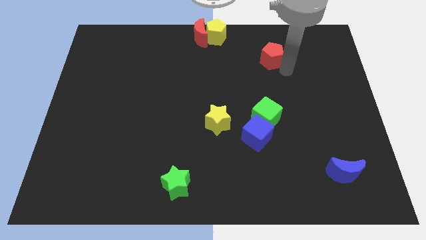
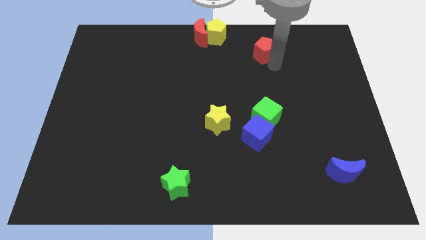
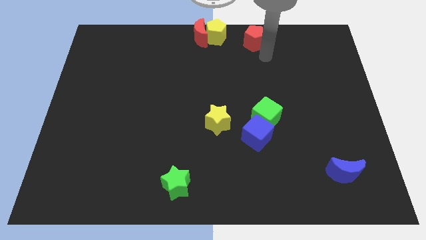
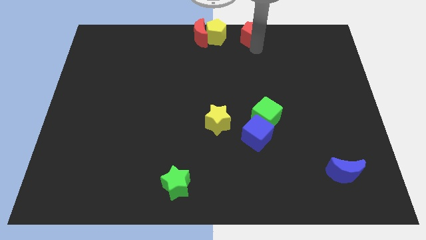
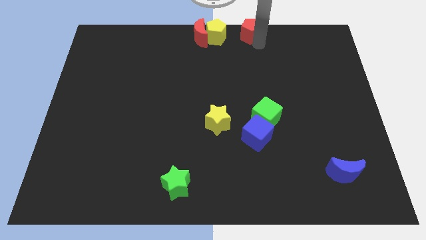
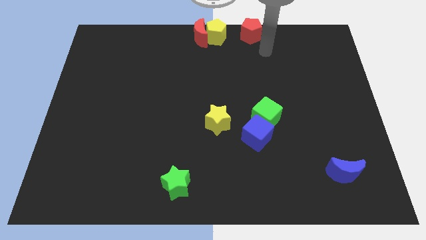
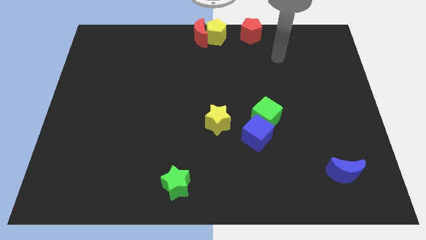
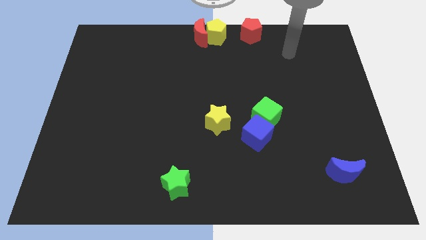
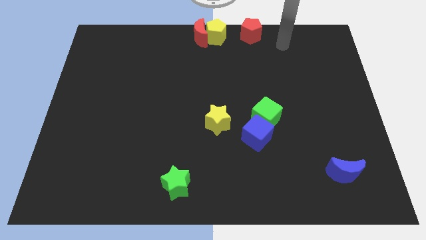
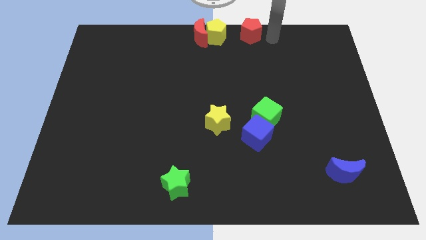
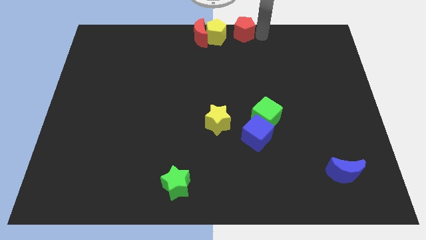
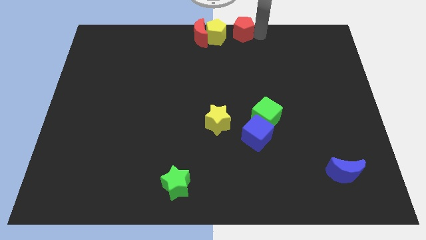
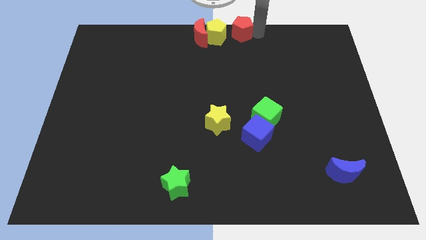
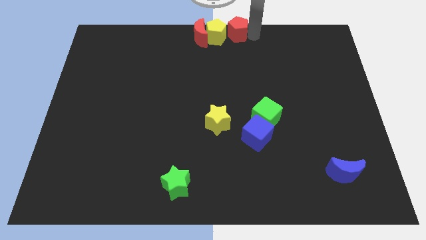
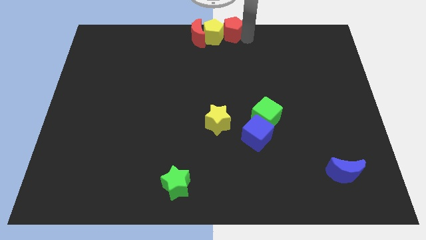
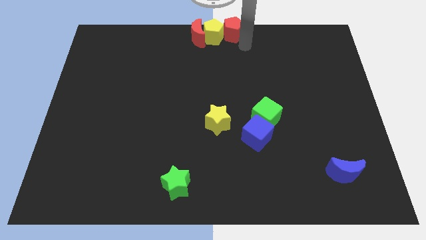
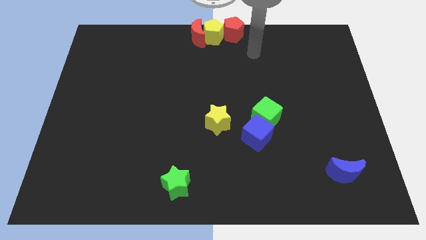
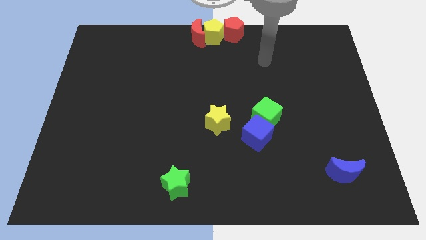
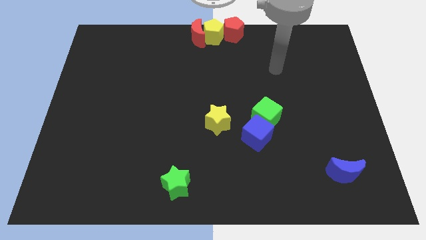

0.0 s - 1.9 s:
move the red pentagon into the yellow pentagon

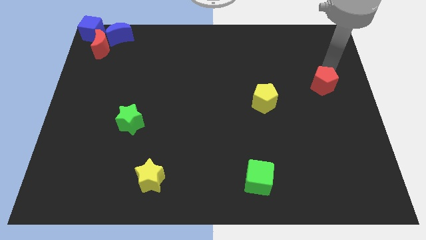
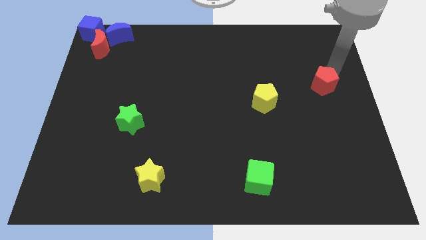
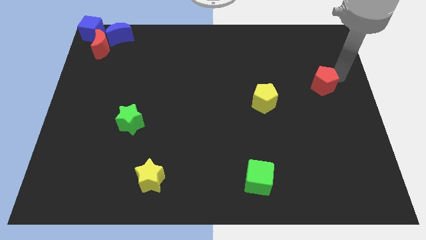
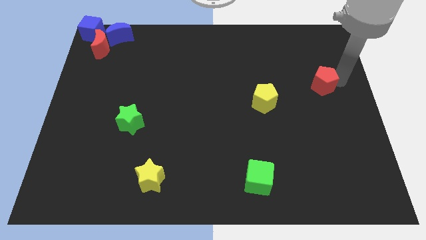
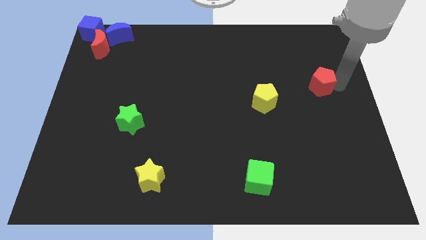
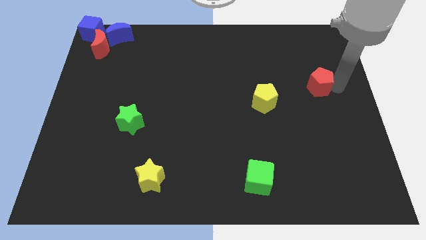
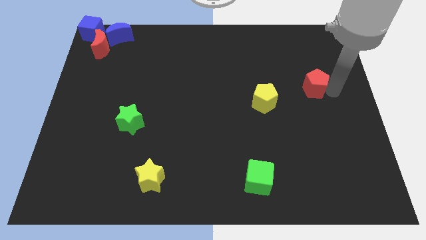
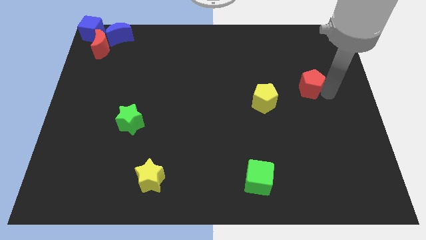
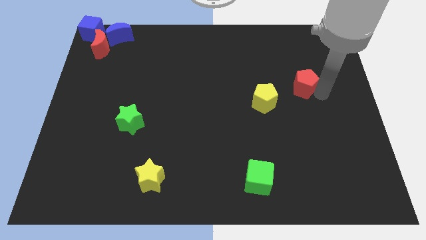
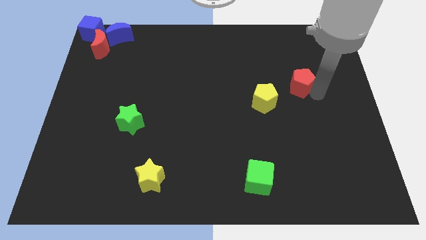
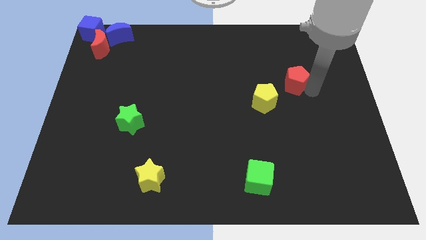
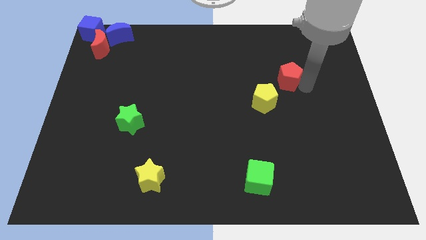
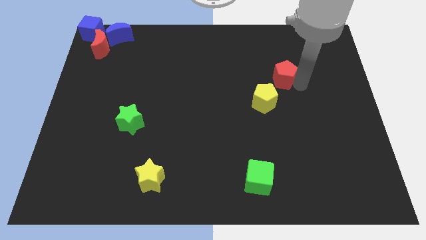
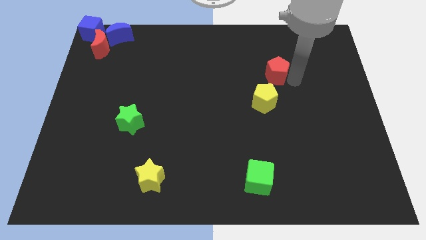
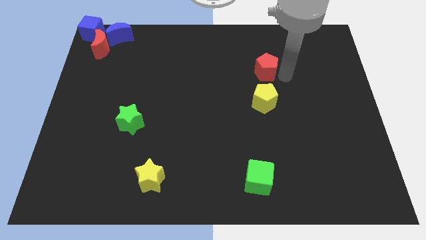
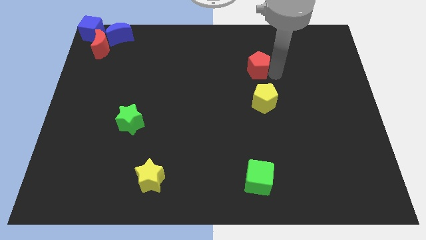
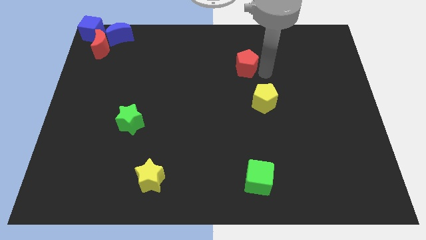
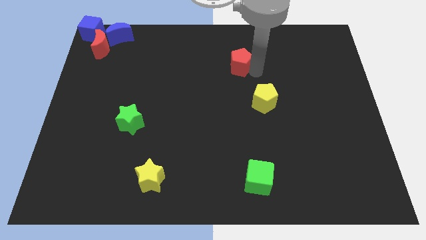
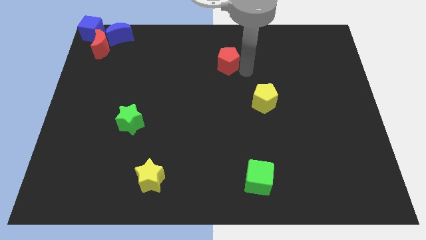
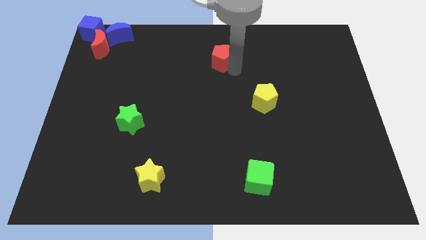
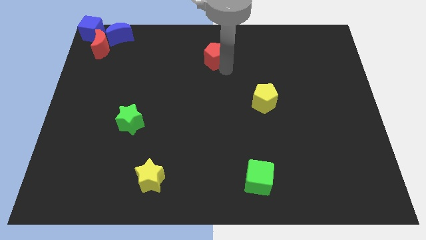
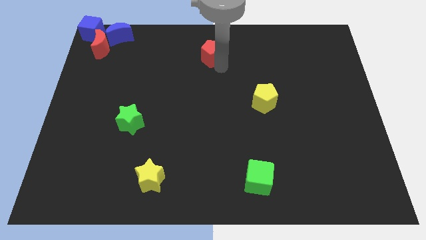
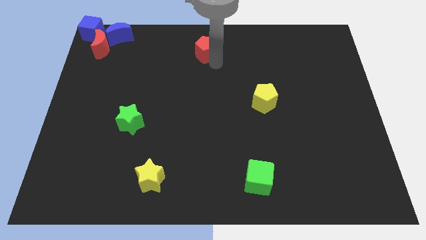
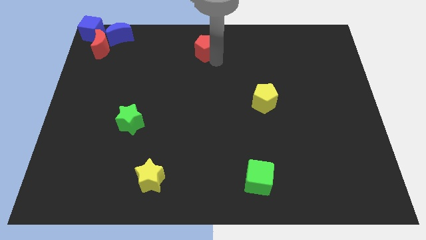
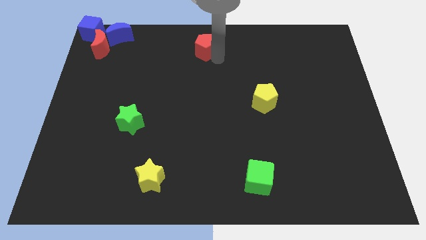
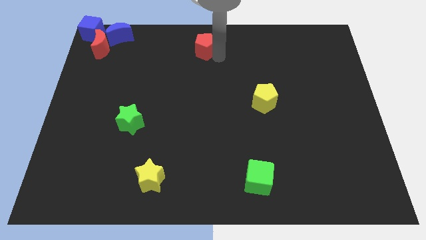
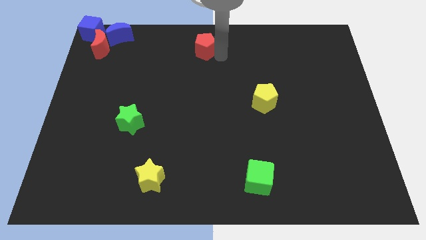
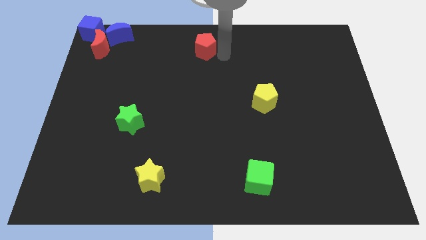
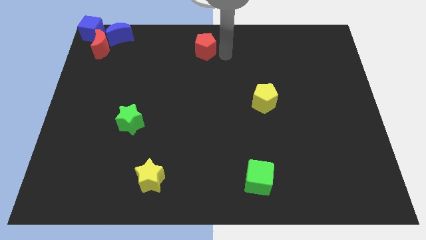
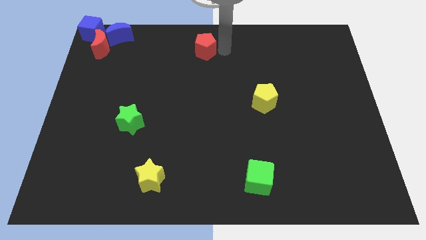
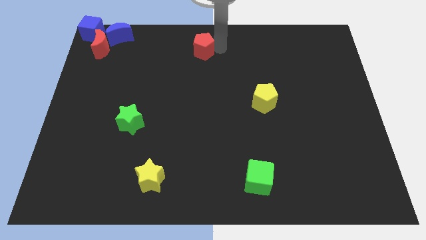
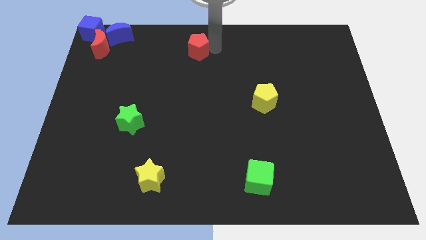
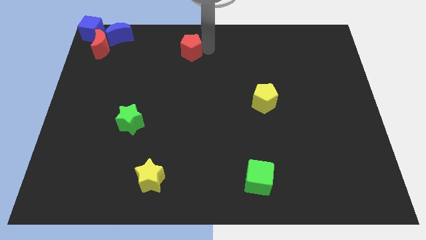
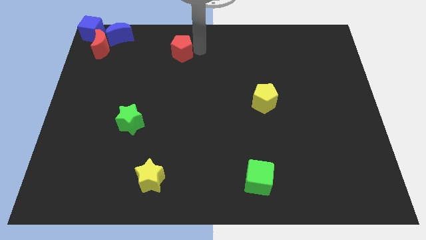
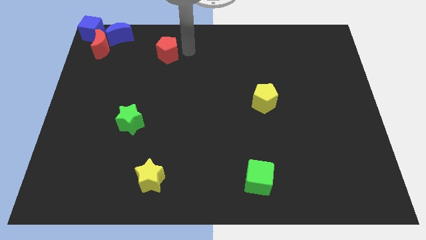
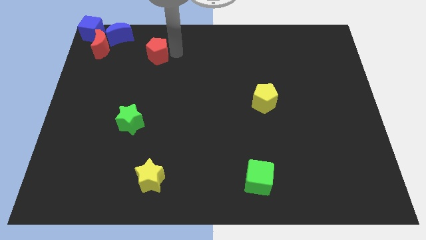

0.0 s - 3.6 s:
place red pentagon parallel to red moon

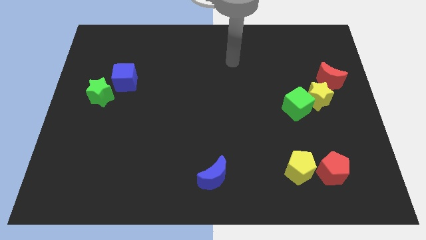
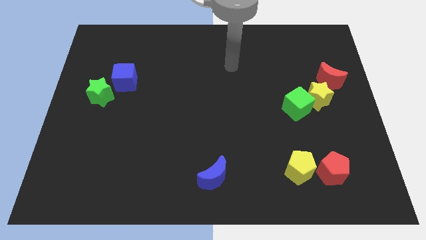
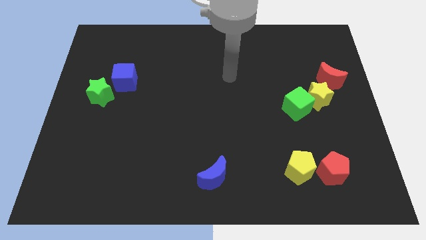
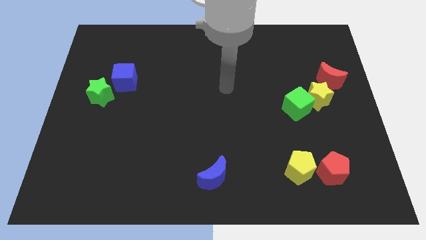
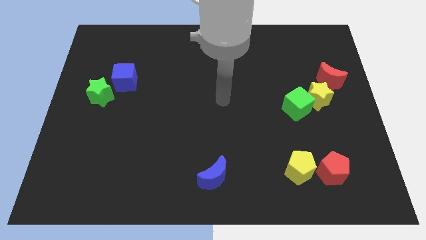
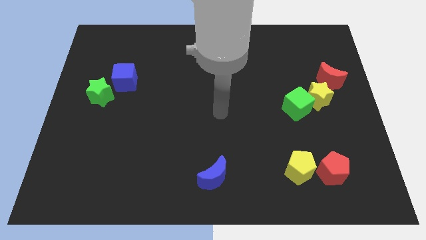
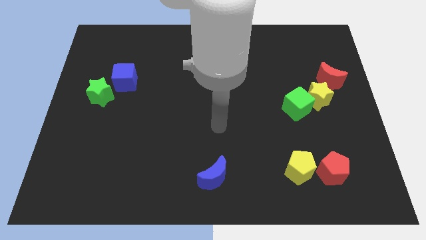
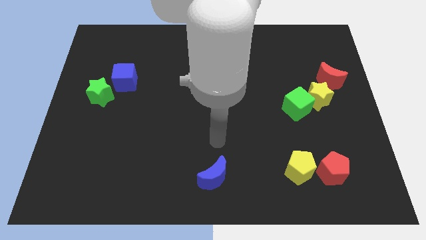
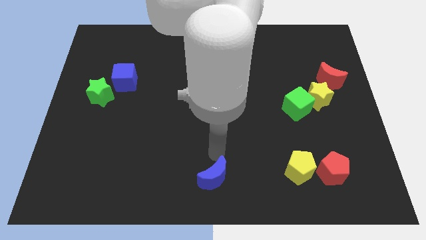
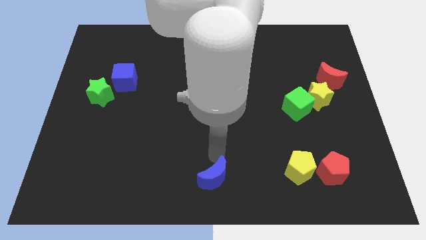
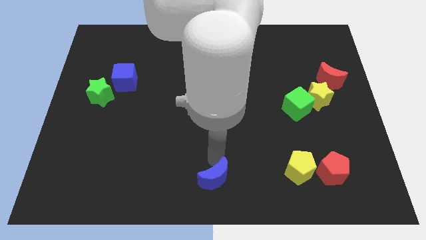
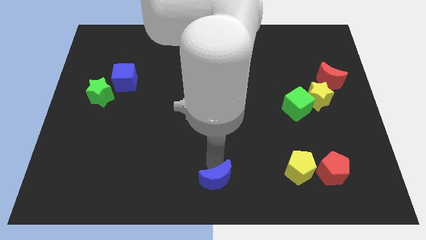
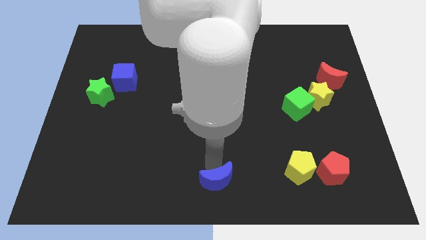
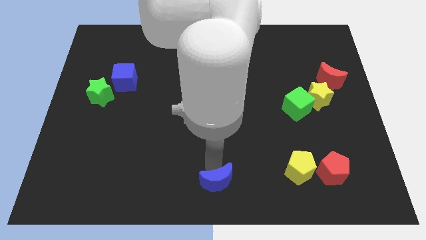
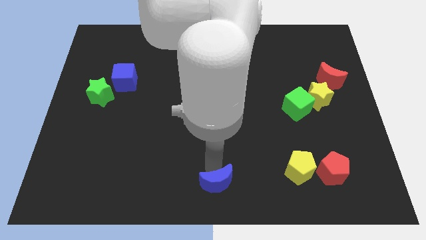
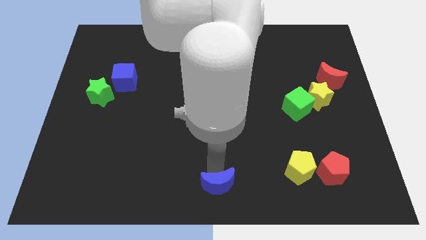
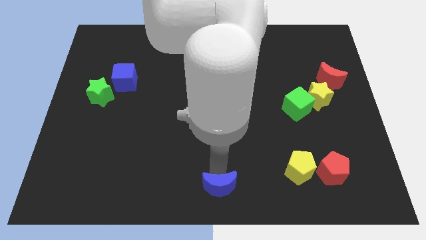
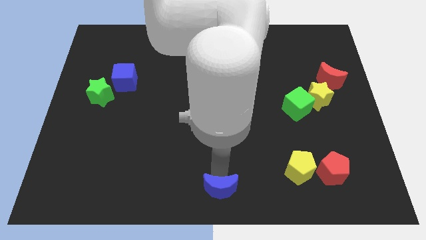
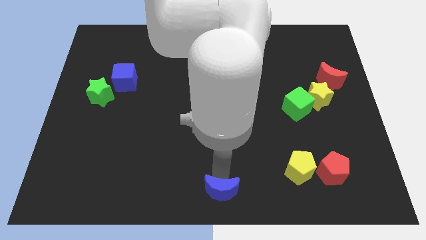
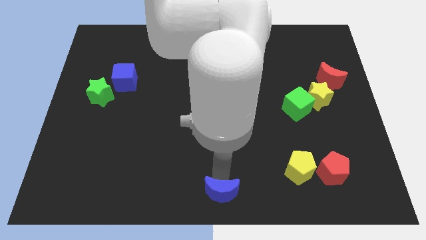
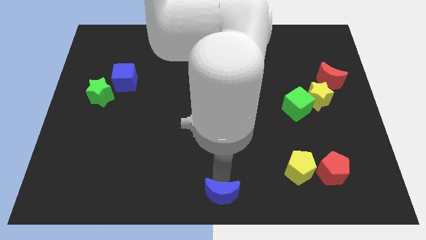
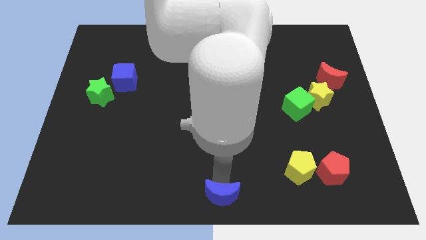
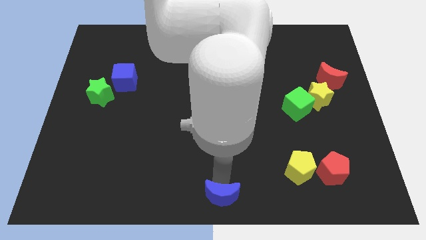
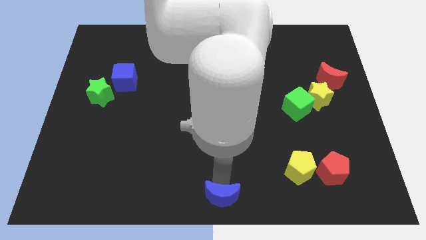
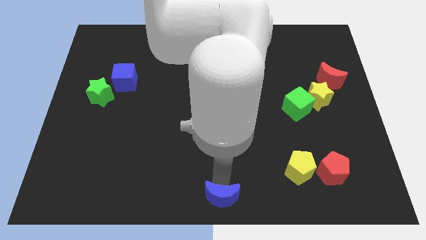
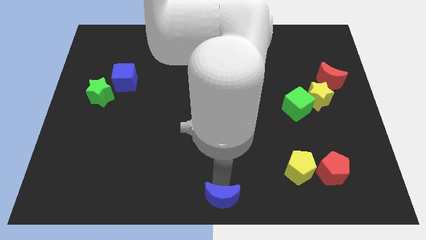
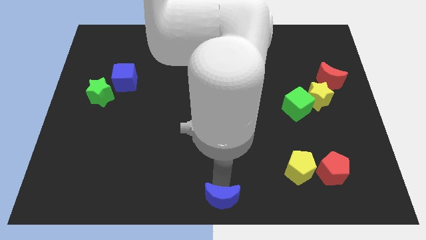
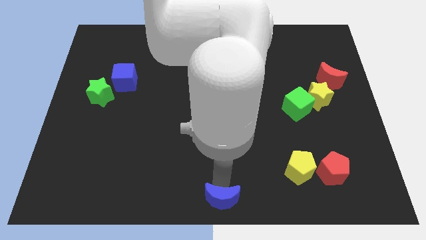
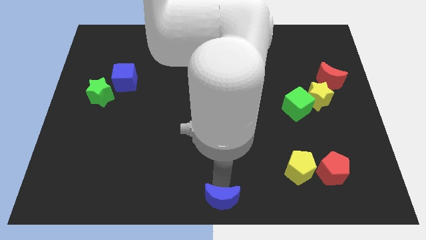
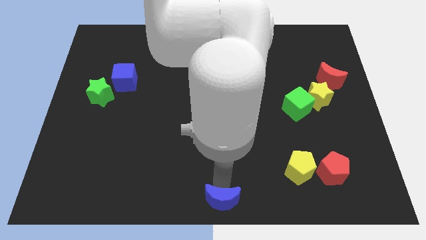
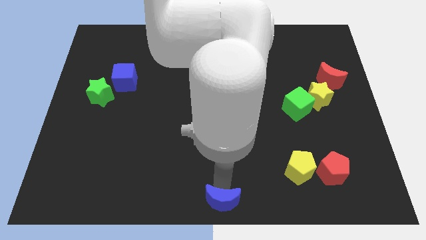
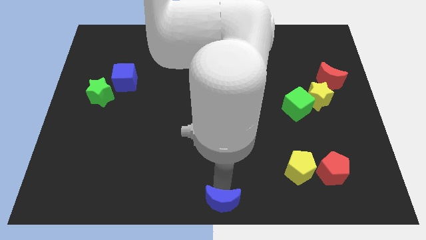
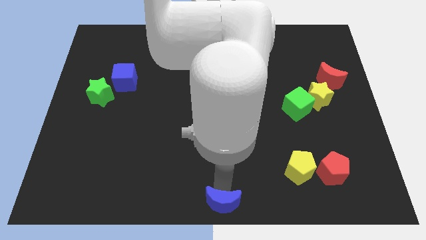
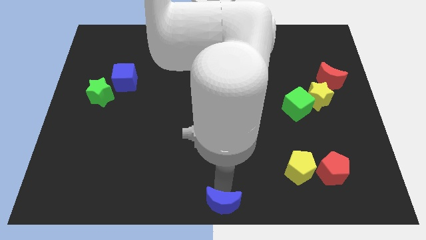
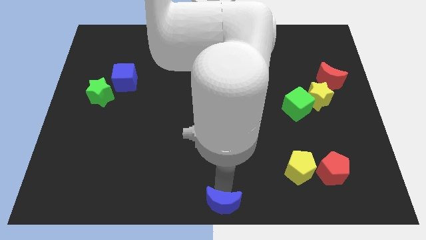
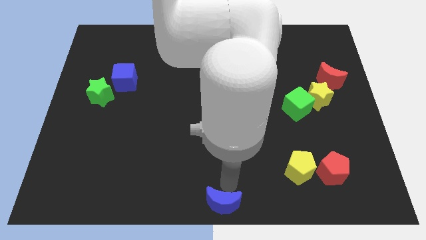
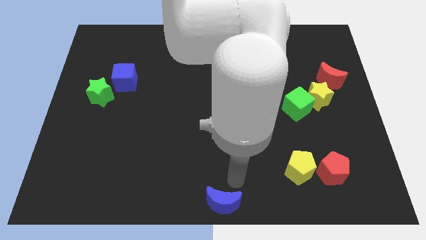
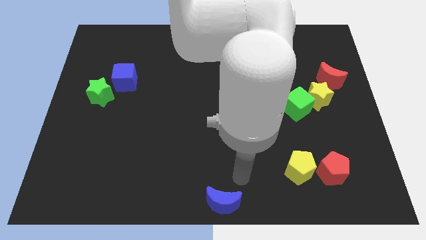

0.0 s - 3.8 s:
move blue moon to the bottom center
